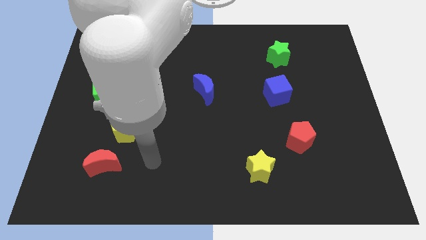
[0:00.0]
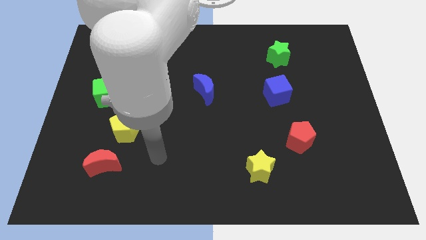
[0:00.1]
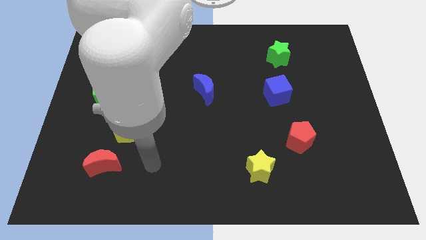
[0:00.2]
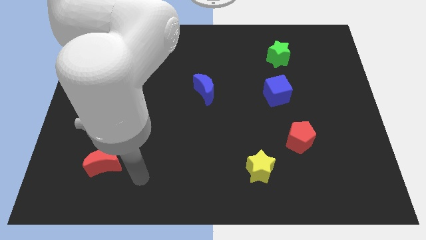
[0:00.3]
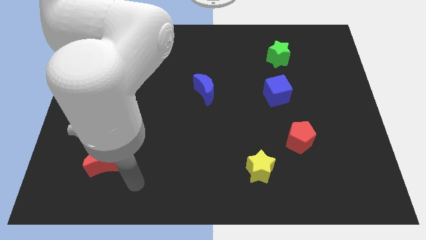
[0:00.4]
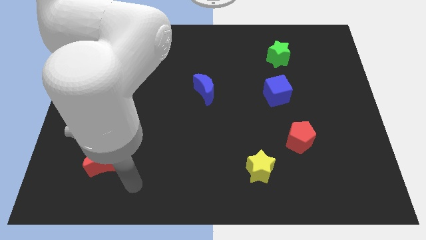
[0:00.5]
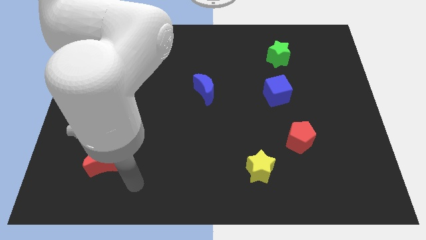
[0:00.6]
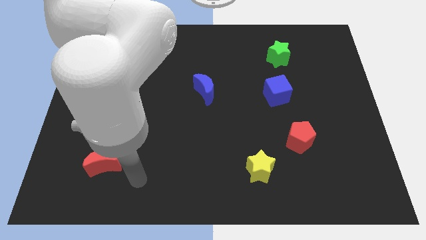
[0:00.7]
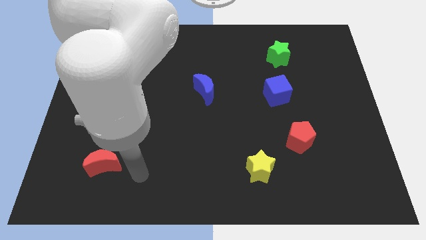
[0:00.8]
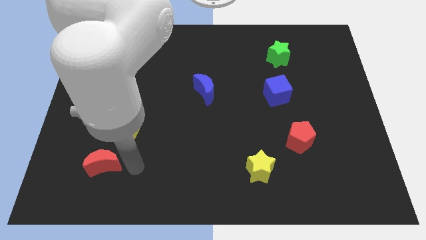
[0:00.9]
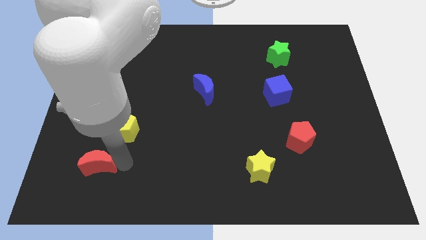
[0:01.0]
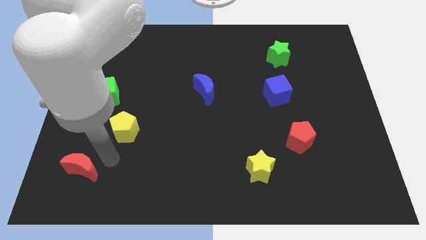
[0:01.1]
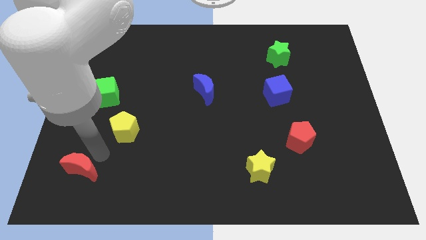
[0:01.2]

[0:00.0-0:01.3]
move red moon slightly left

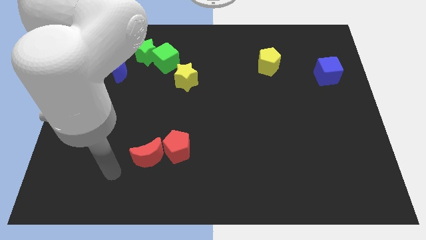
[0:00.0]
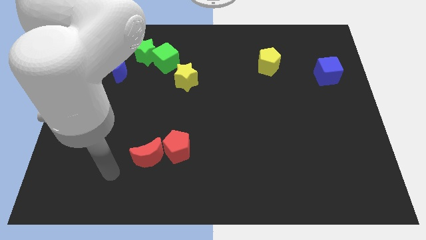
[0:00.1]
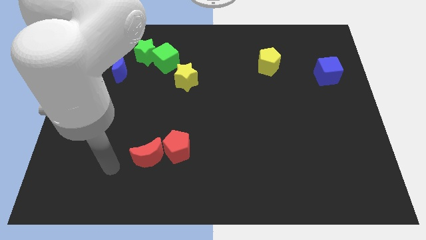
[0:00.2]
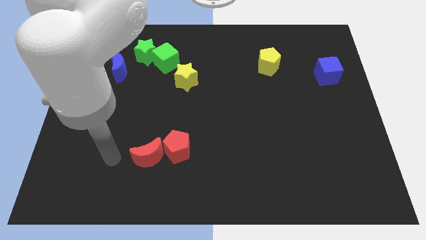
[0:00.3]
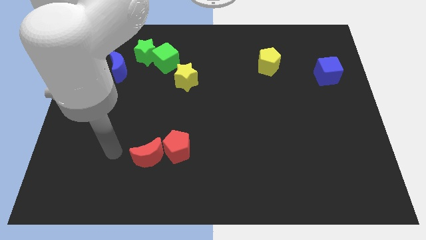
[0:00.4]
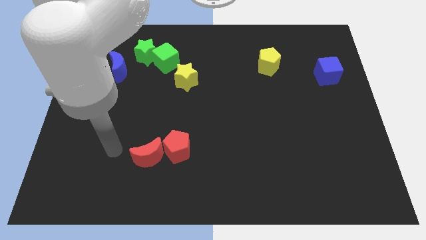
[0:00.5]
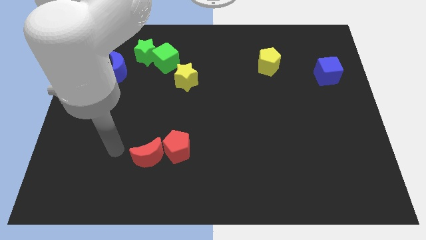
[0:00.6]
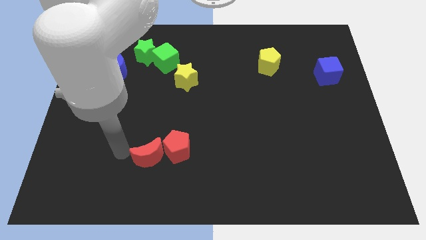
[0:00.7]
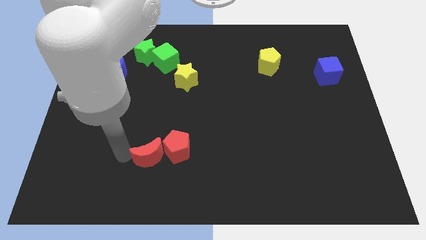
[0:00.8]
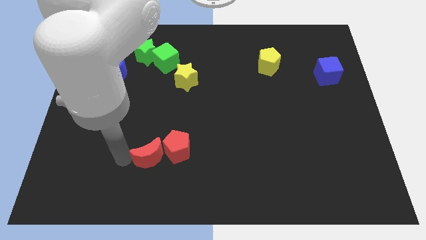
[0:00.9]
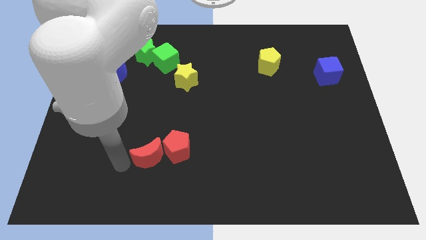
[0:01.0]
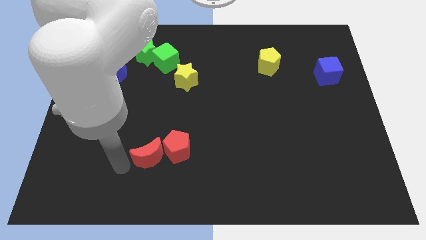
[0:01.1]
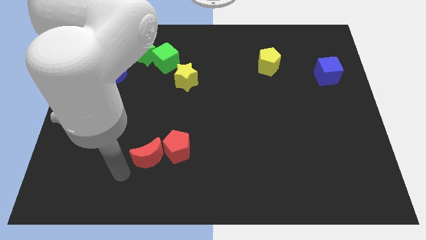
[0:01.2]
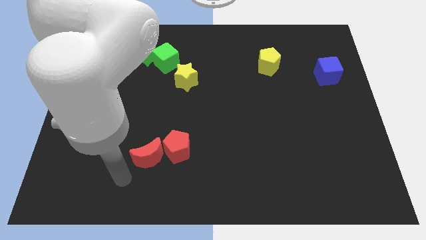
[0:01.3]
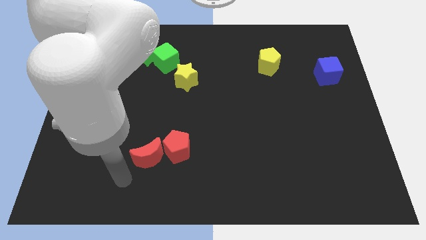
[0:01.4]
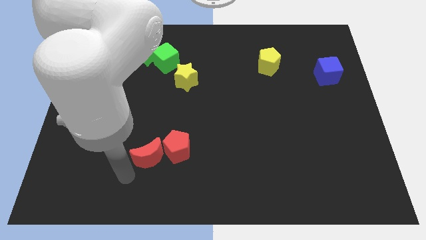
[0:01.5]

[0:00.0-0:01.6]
move the arm close to the red moon

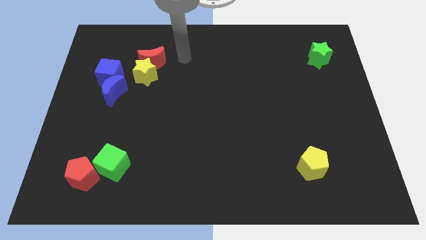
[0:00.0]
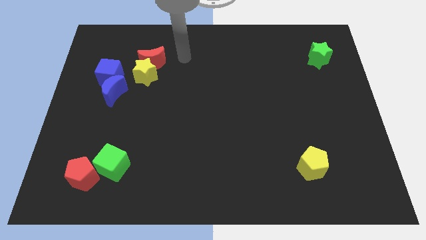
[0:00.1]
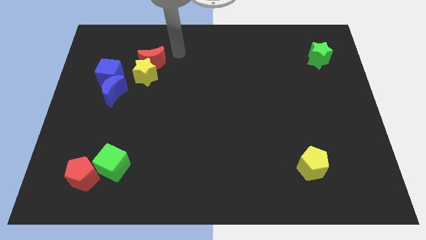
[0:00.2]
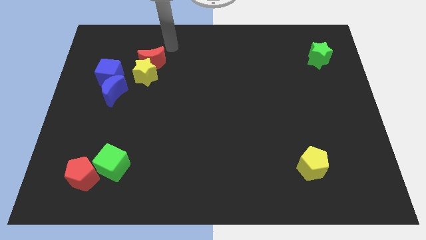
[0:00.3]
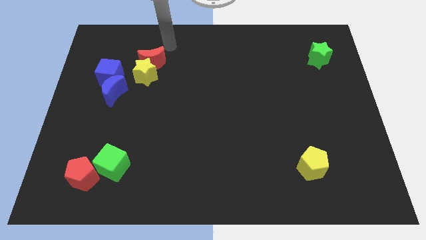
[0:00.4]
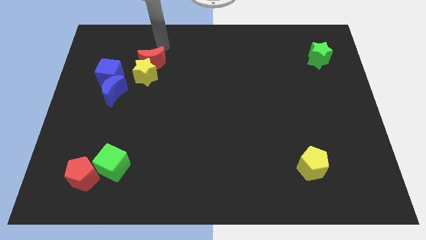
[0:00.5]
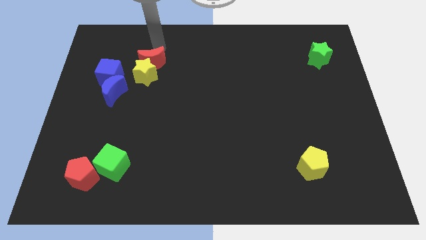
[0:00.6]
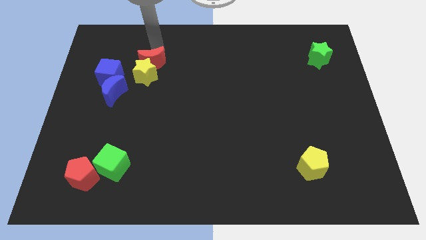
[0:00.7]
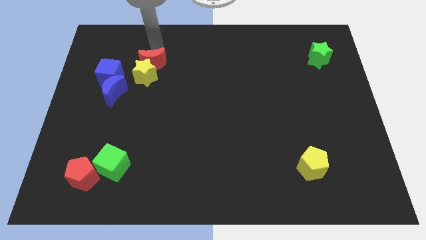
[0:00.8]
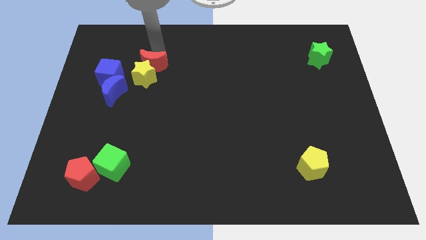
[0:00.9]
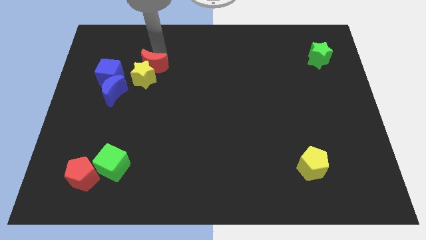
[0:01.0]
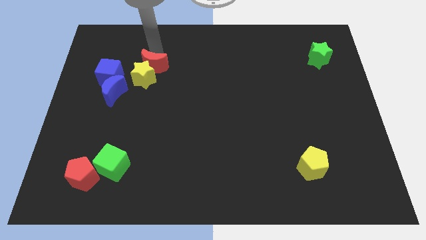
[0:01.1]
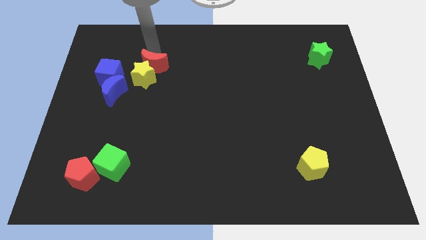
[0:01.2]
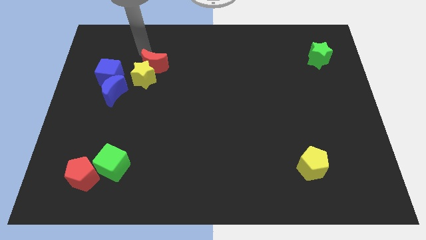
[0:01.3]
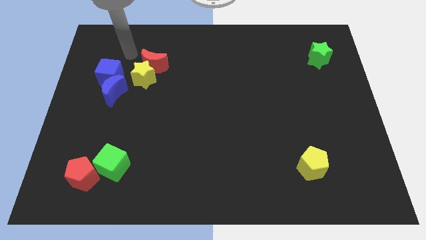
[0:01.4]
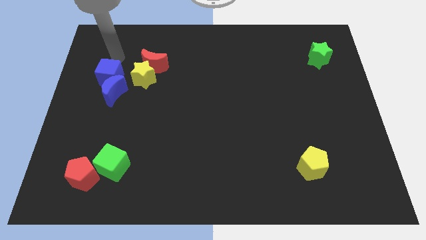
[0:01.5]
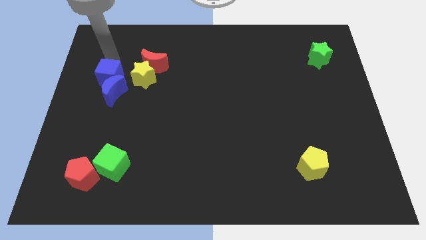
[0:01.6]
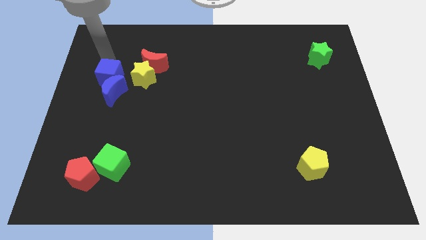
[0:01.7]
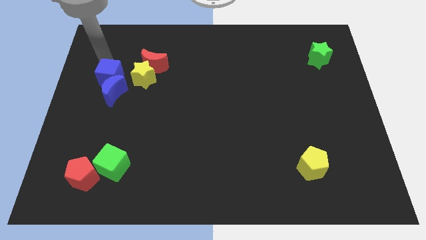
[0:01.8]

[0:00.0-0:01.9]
push the red crescent into the yellow star

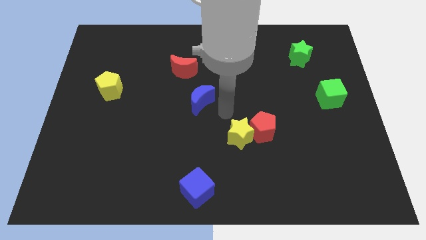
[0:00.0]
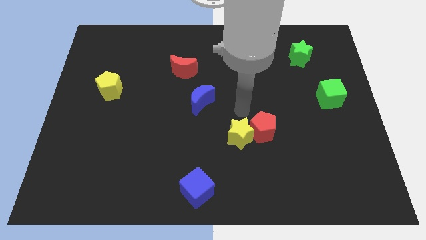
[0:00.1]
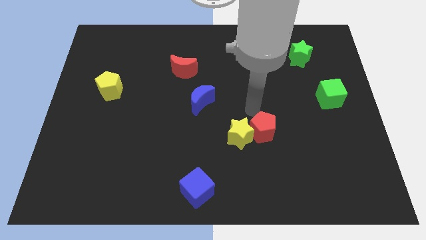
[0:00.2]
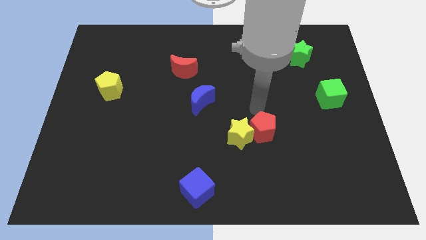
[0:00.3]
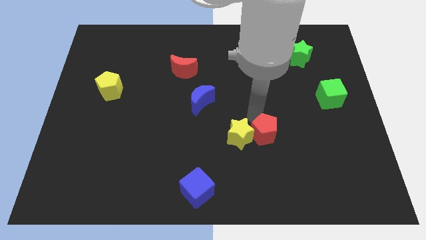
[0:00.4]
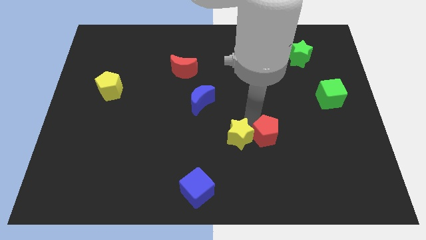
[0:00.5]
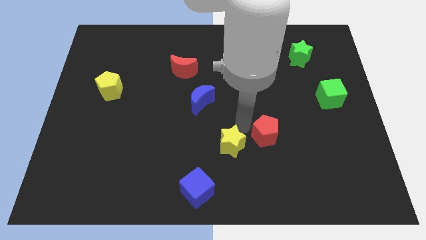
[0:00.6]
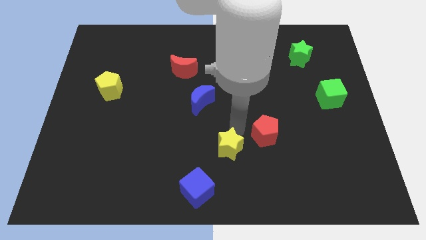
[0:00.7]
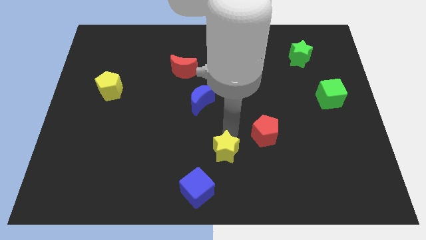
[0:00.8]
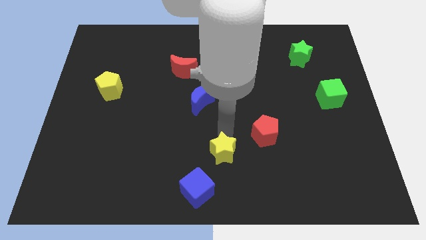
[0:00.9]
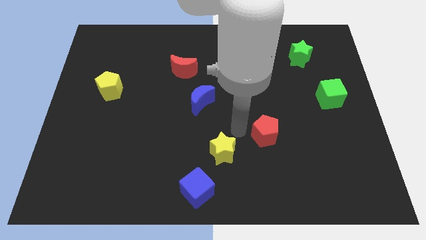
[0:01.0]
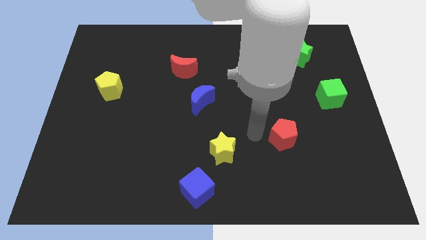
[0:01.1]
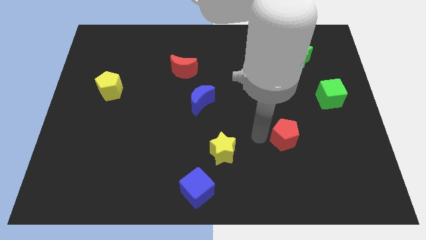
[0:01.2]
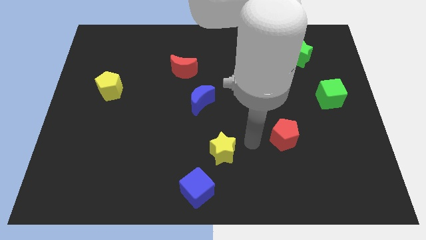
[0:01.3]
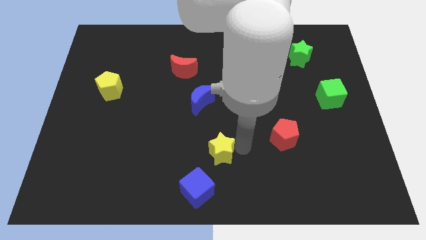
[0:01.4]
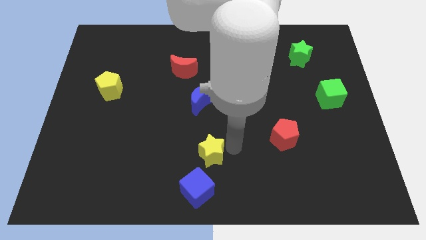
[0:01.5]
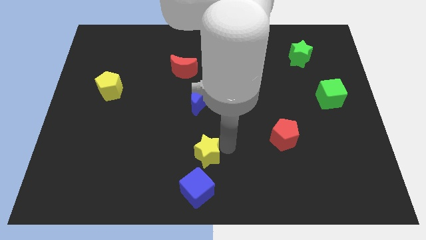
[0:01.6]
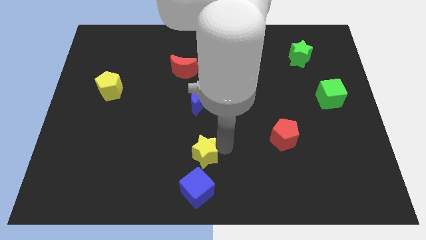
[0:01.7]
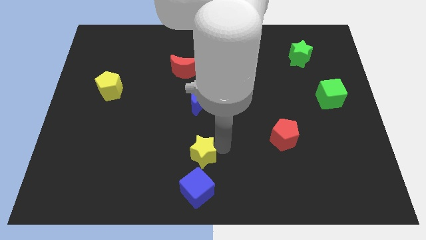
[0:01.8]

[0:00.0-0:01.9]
place red pentagon away from yellow star

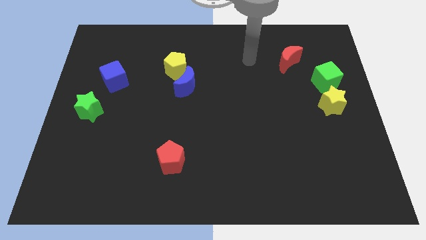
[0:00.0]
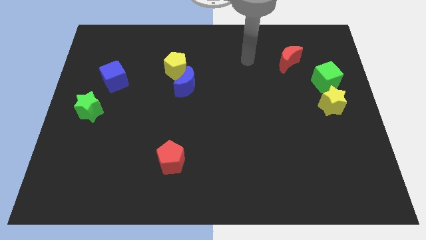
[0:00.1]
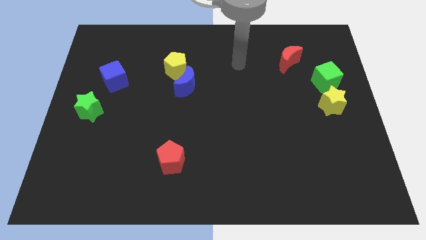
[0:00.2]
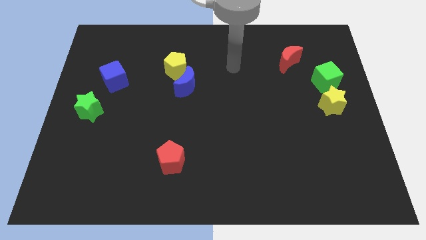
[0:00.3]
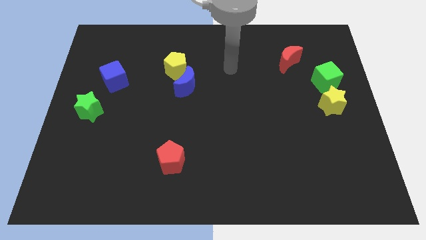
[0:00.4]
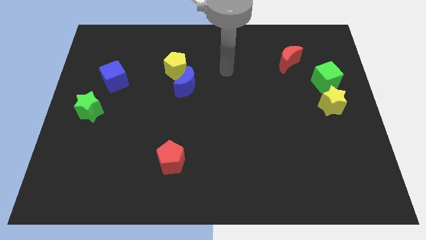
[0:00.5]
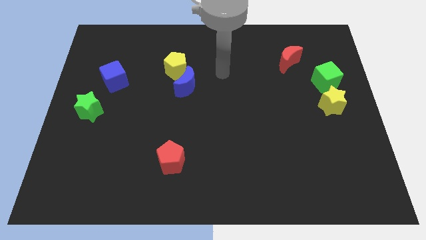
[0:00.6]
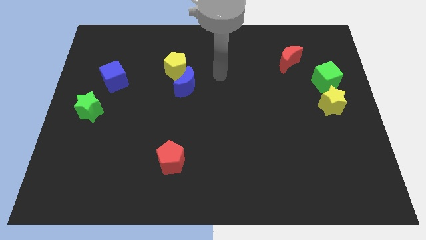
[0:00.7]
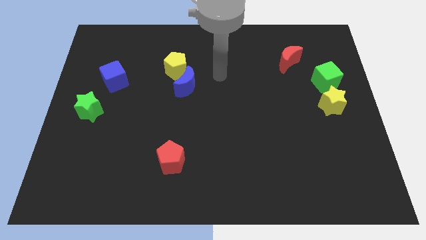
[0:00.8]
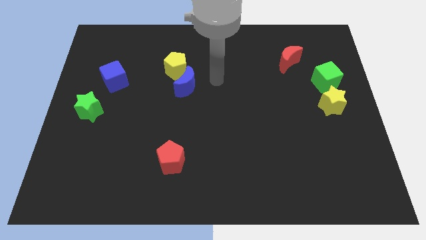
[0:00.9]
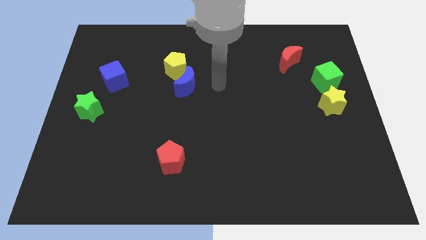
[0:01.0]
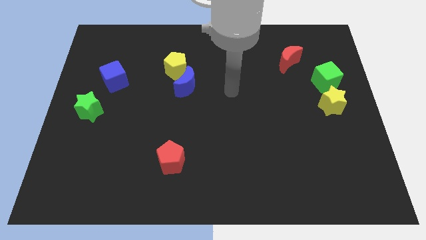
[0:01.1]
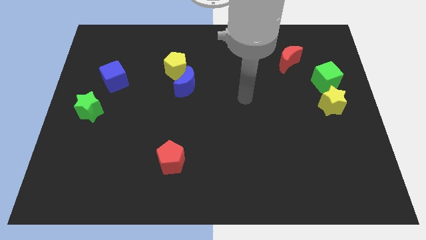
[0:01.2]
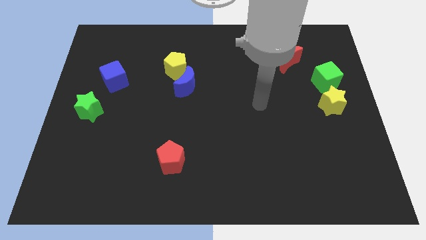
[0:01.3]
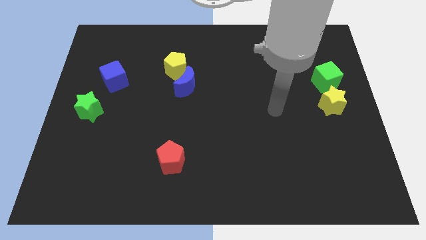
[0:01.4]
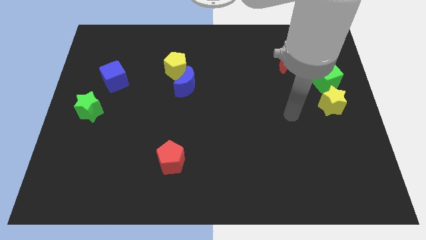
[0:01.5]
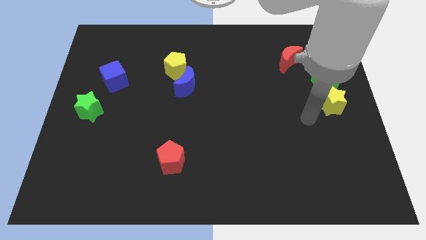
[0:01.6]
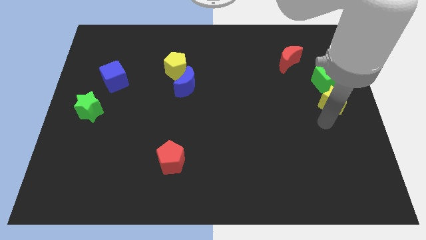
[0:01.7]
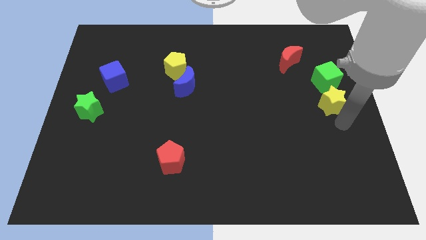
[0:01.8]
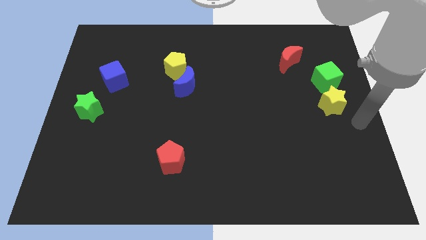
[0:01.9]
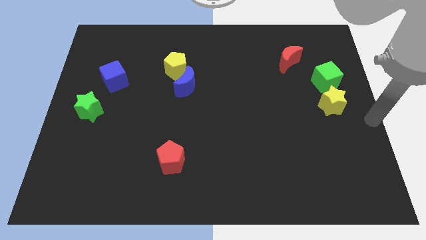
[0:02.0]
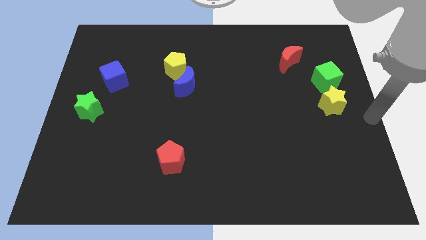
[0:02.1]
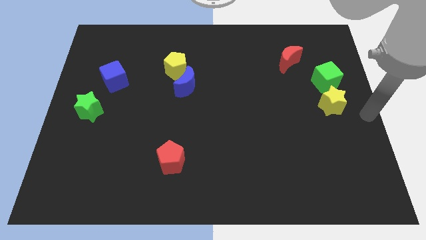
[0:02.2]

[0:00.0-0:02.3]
move your hand to the center right
